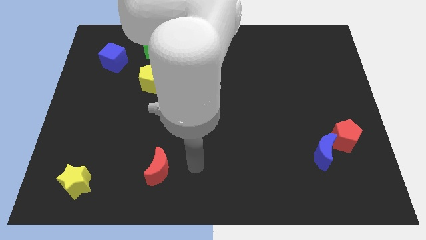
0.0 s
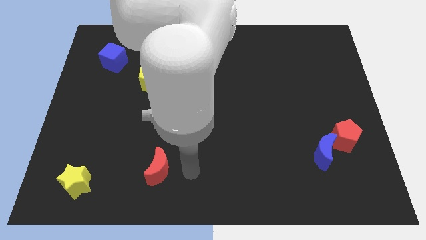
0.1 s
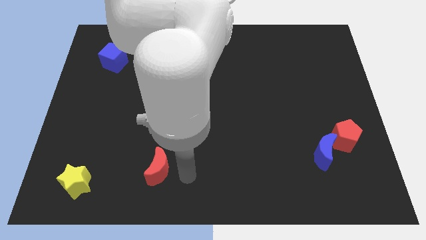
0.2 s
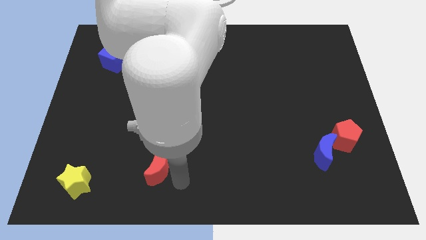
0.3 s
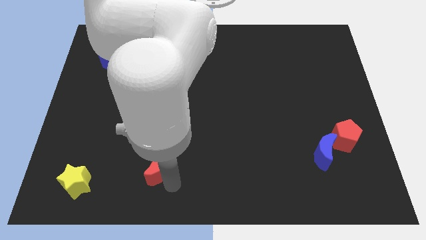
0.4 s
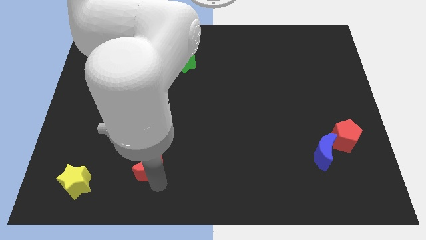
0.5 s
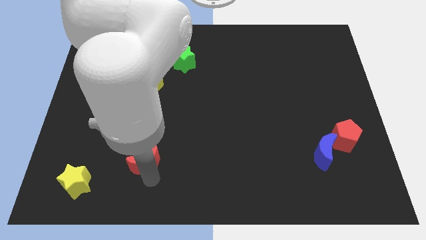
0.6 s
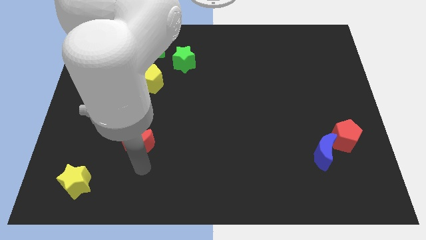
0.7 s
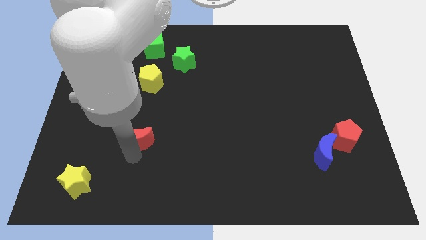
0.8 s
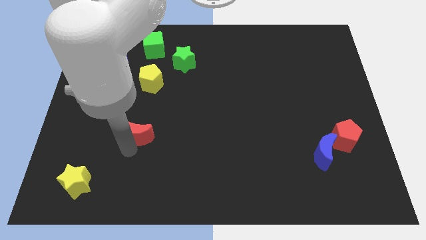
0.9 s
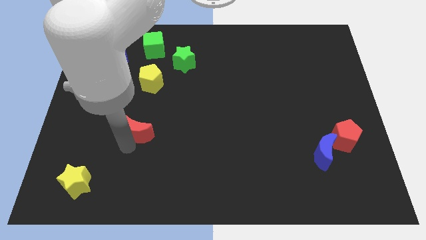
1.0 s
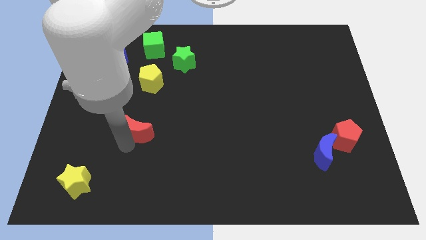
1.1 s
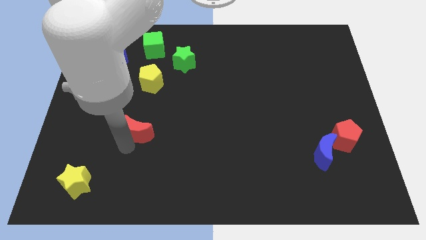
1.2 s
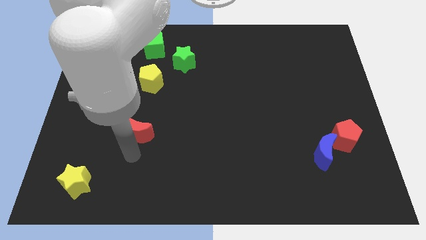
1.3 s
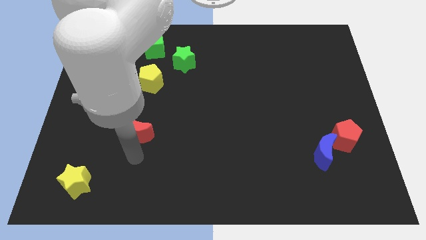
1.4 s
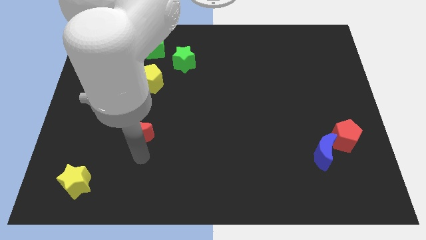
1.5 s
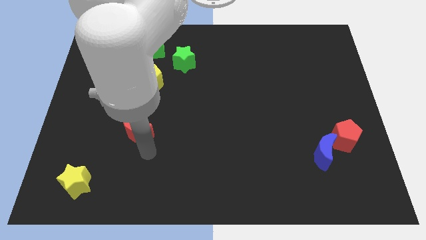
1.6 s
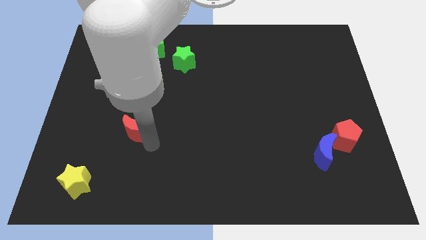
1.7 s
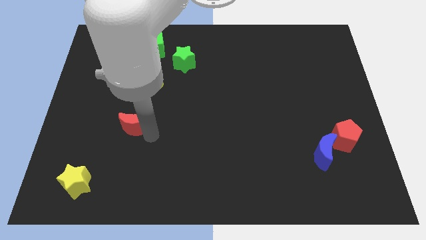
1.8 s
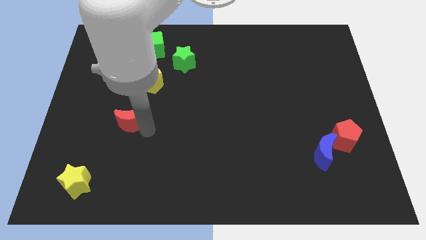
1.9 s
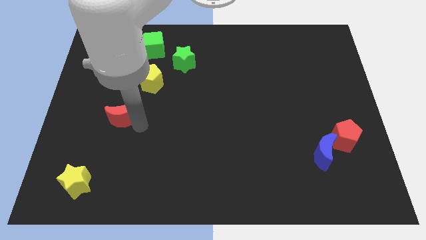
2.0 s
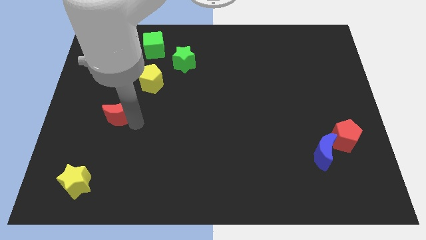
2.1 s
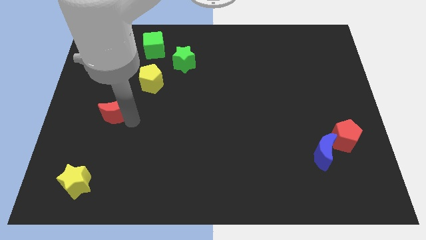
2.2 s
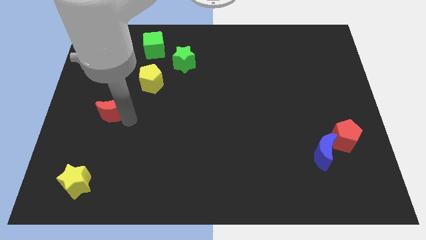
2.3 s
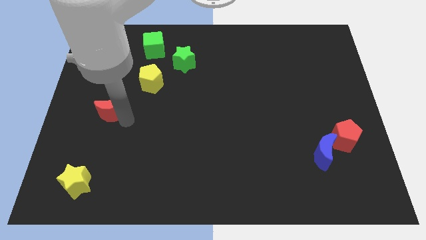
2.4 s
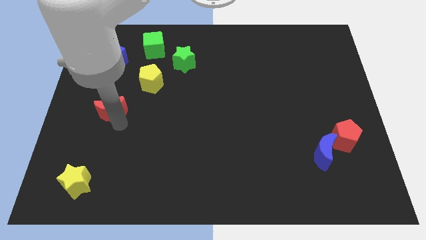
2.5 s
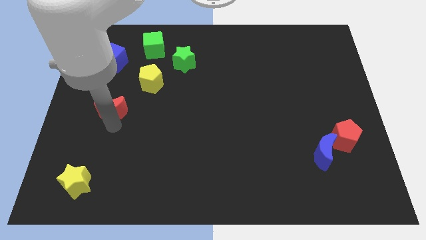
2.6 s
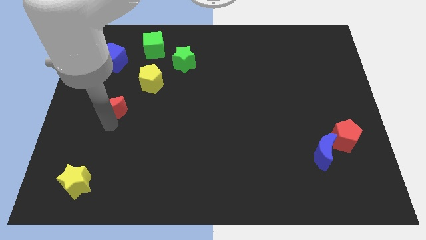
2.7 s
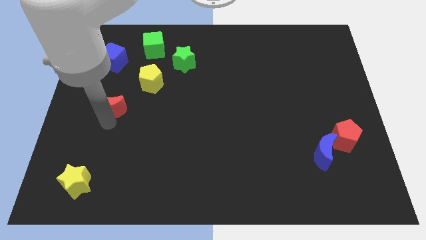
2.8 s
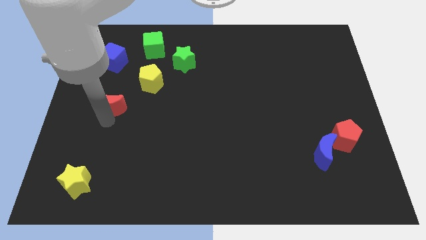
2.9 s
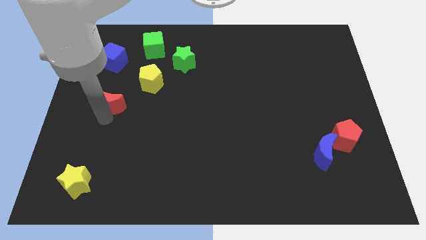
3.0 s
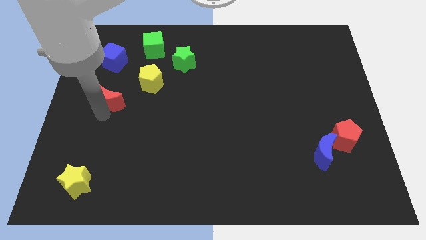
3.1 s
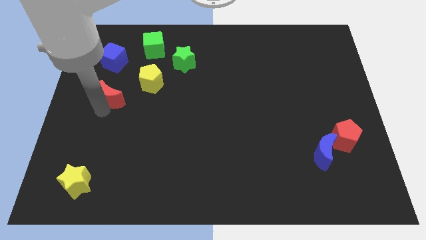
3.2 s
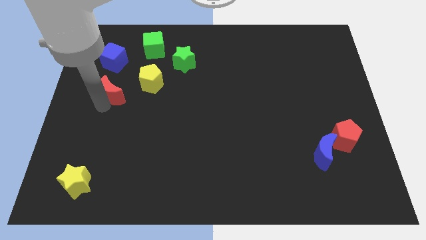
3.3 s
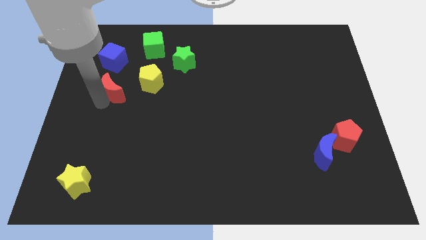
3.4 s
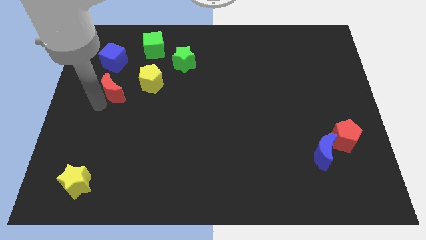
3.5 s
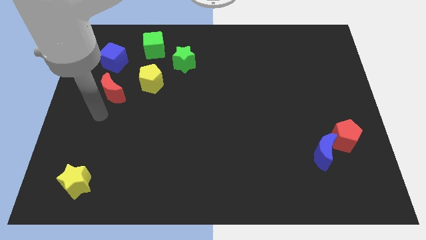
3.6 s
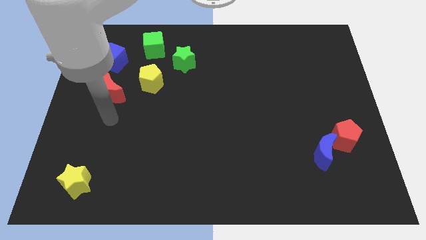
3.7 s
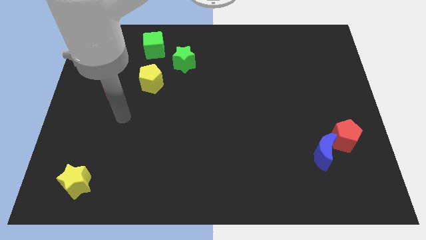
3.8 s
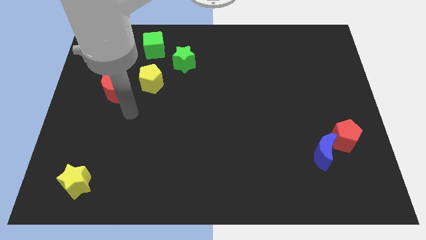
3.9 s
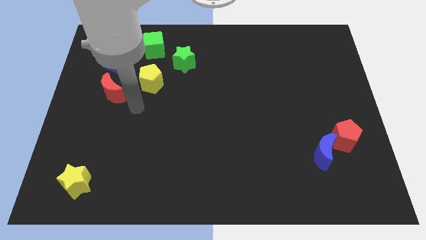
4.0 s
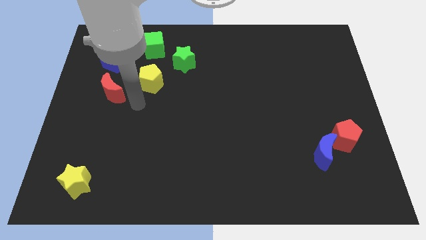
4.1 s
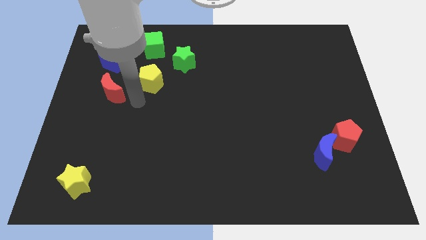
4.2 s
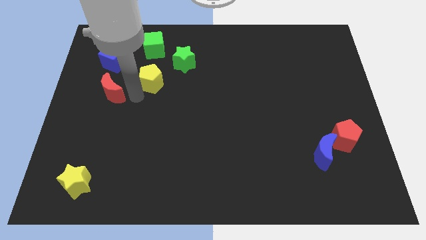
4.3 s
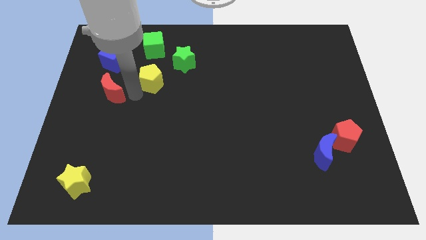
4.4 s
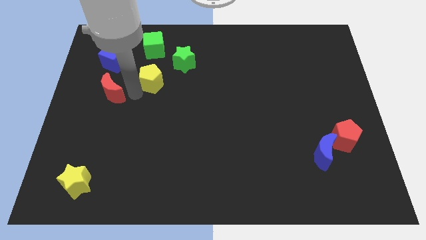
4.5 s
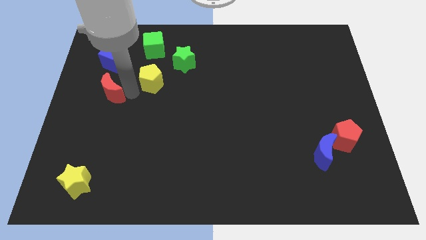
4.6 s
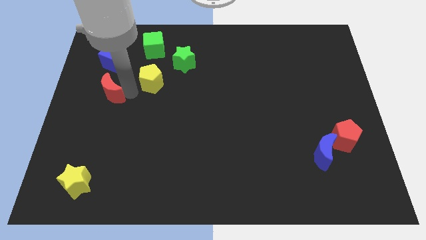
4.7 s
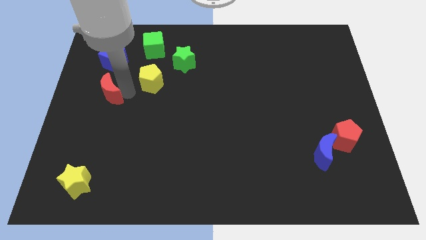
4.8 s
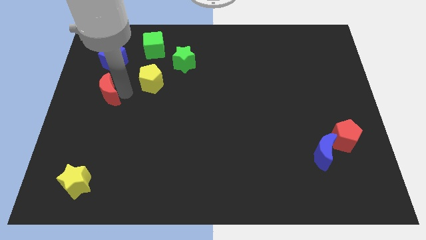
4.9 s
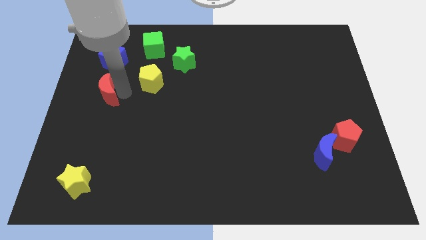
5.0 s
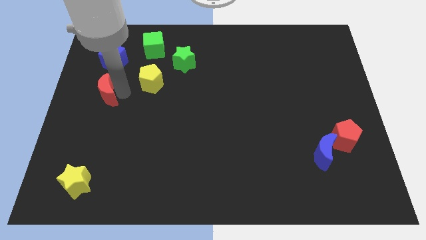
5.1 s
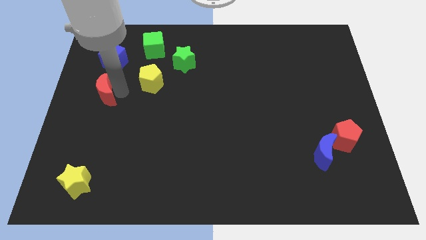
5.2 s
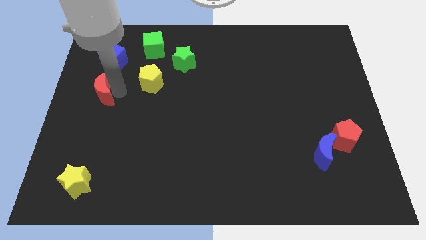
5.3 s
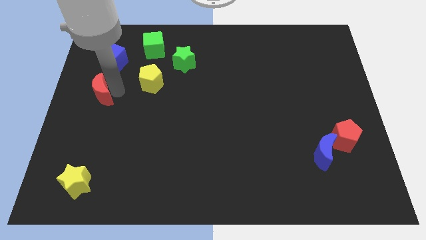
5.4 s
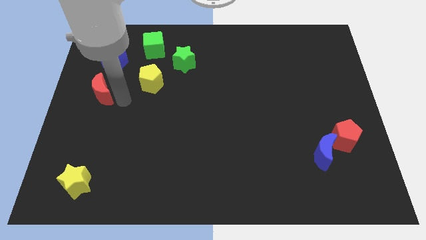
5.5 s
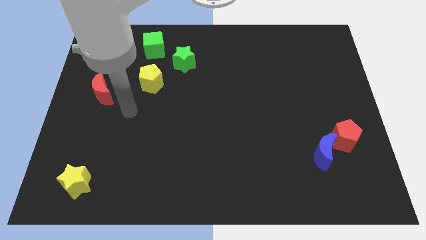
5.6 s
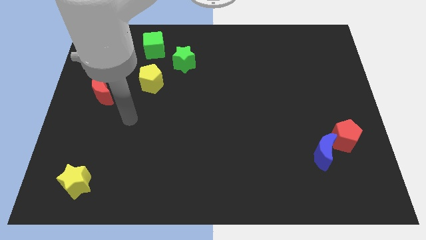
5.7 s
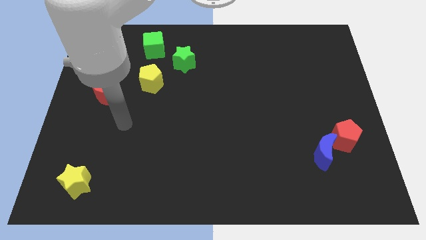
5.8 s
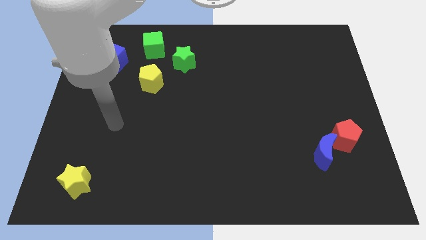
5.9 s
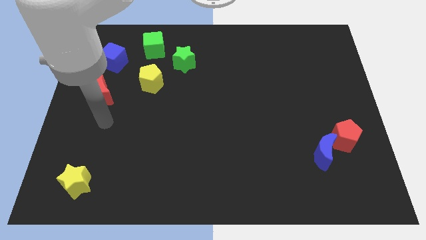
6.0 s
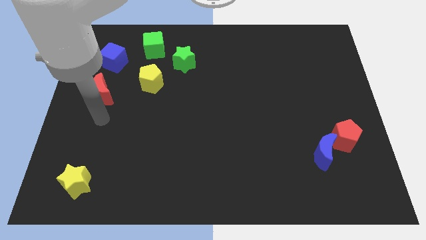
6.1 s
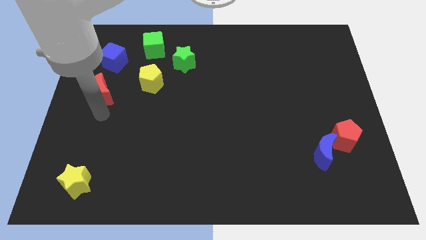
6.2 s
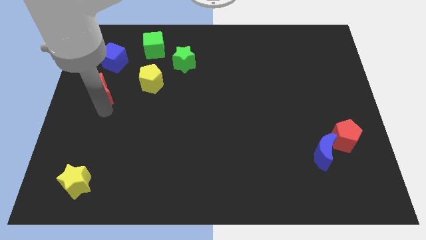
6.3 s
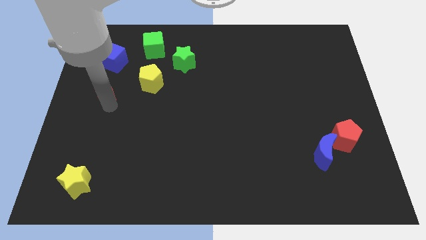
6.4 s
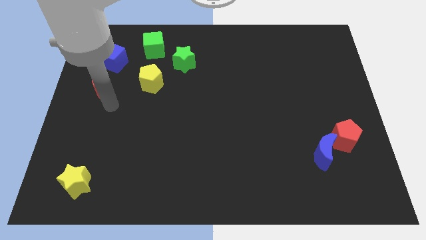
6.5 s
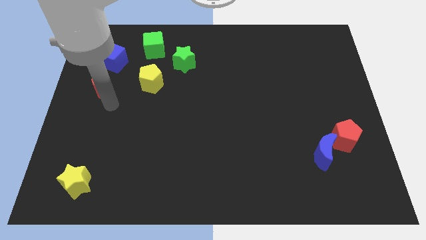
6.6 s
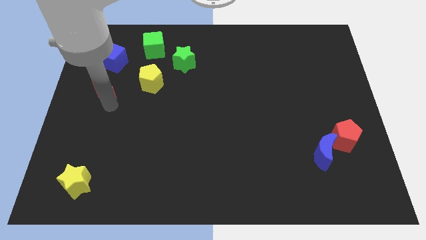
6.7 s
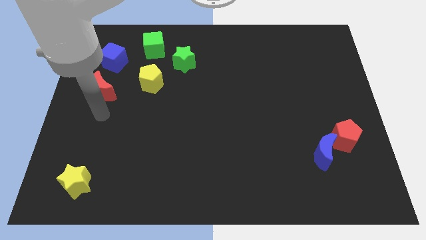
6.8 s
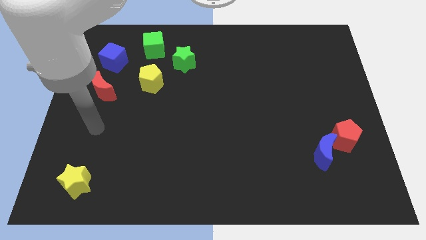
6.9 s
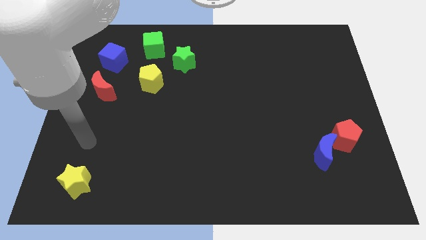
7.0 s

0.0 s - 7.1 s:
push red moon towards blue cube

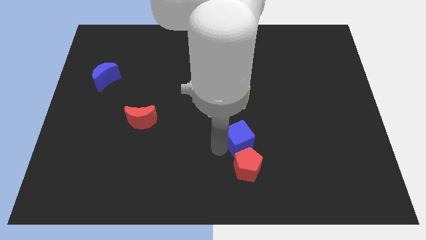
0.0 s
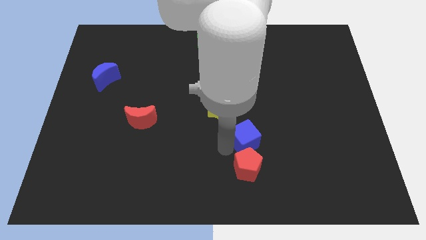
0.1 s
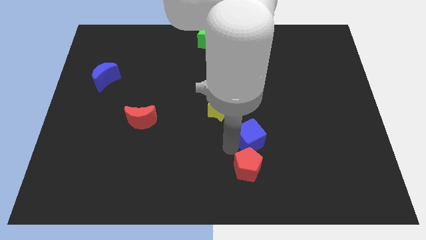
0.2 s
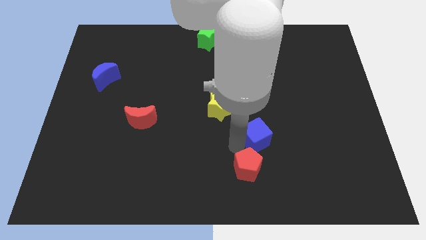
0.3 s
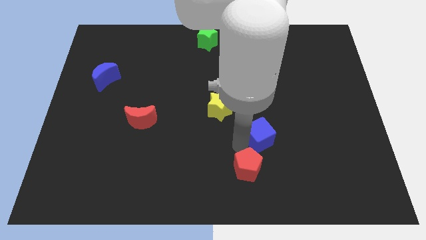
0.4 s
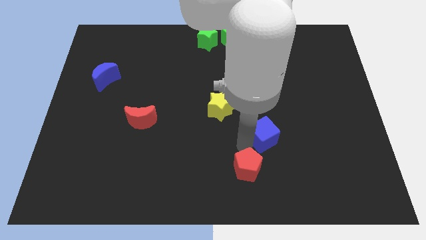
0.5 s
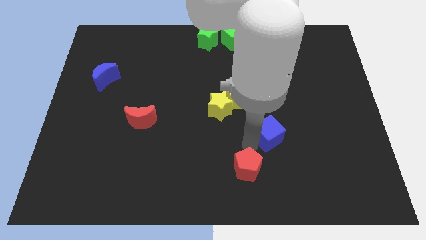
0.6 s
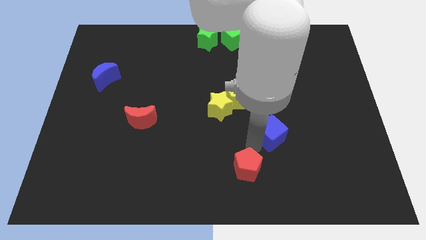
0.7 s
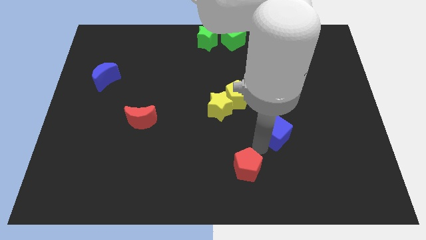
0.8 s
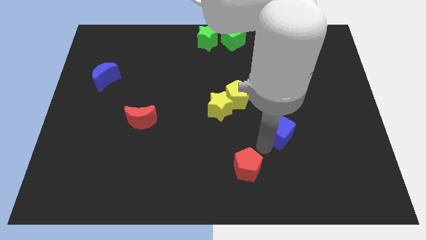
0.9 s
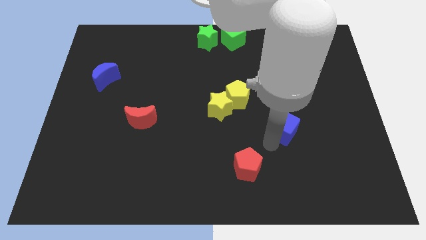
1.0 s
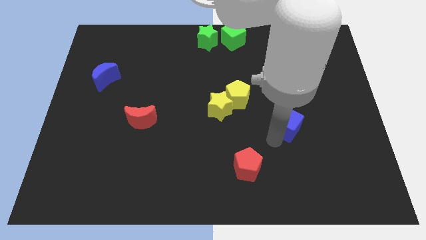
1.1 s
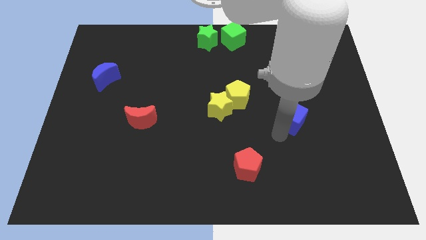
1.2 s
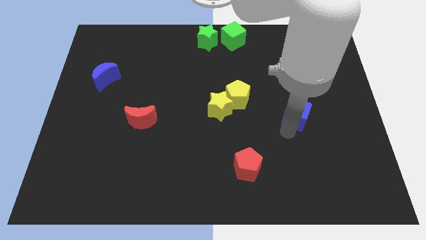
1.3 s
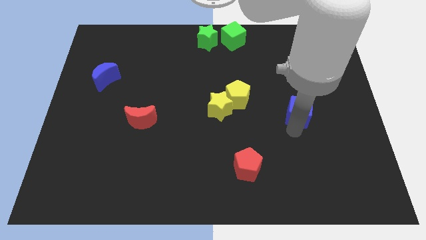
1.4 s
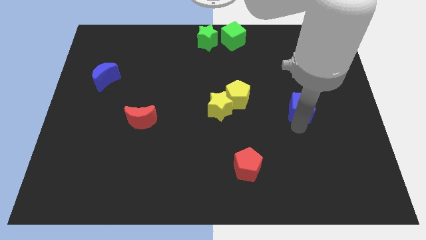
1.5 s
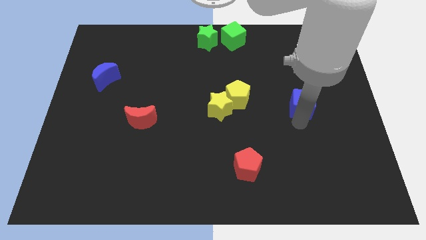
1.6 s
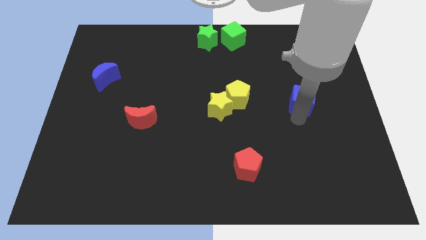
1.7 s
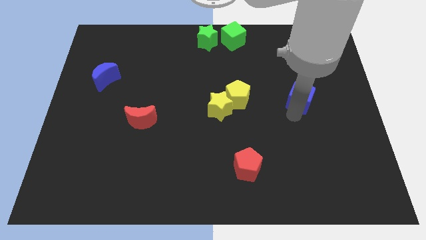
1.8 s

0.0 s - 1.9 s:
put the blue cube horizontally right to the yellow pentagon
